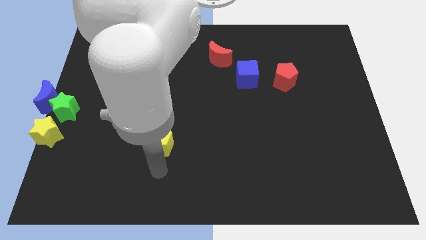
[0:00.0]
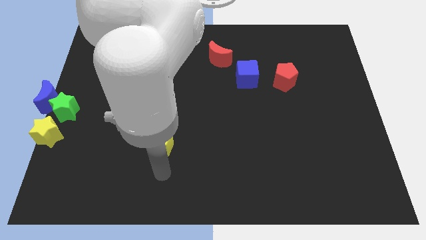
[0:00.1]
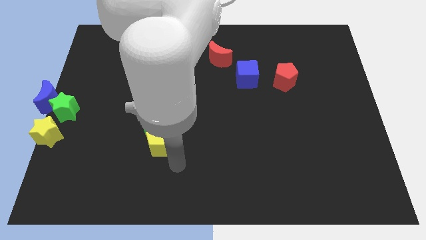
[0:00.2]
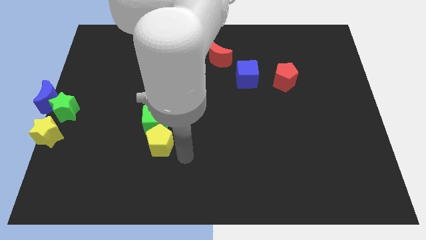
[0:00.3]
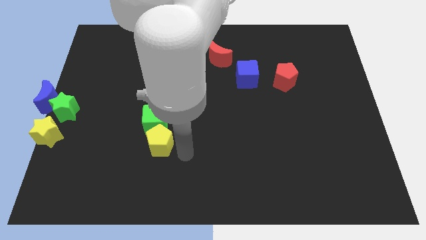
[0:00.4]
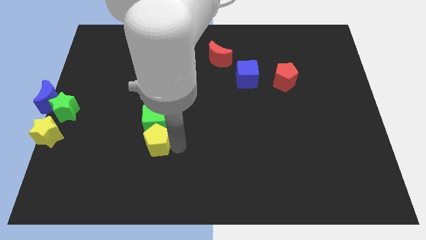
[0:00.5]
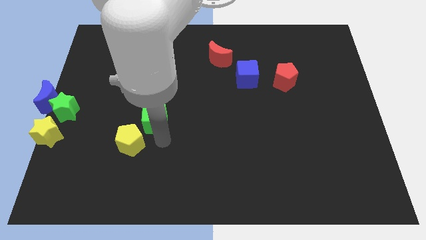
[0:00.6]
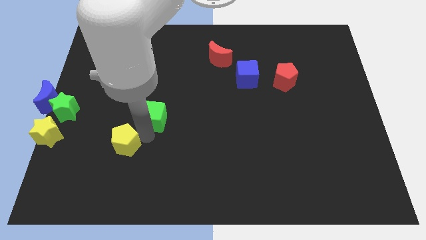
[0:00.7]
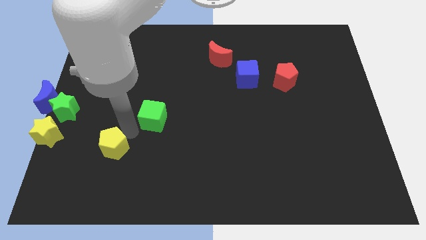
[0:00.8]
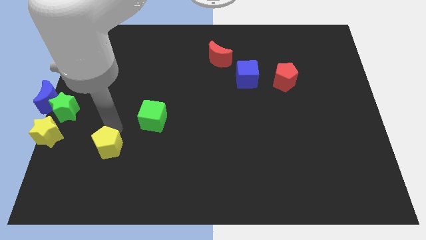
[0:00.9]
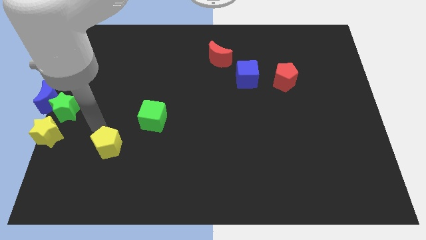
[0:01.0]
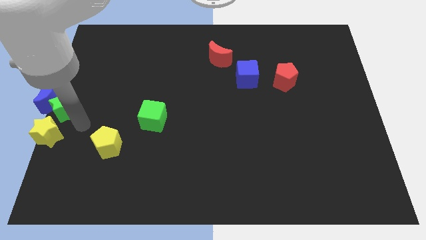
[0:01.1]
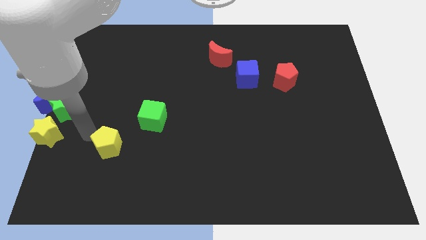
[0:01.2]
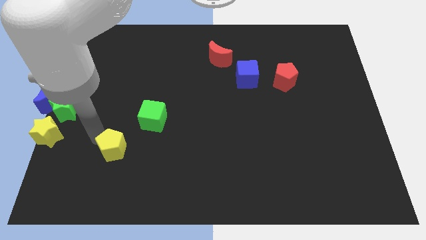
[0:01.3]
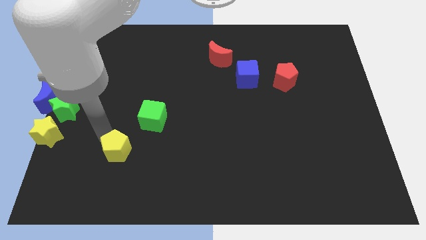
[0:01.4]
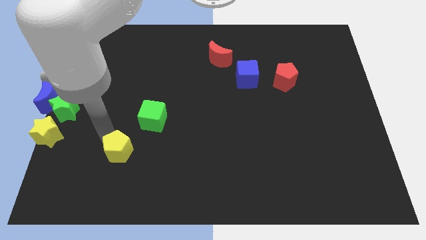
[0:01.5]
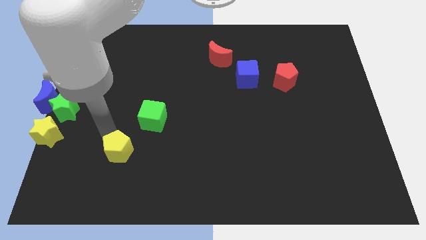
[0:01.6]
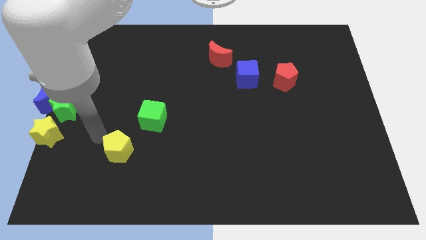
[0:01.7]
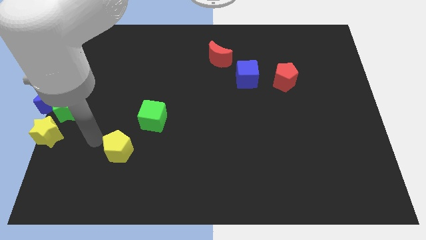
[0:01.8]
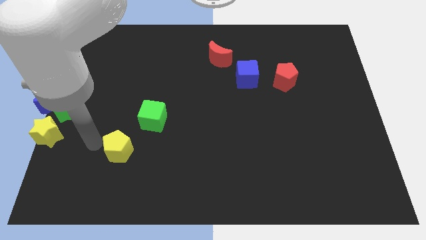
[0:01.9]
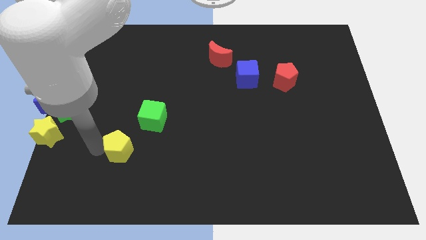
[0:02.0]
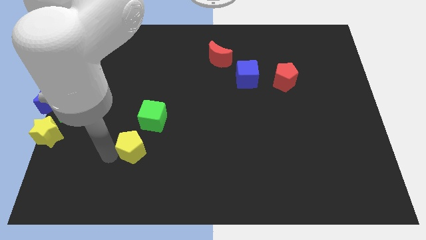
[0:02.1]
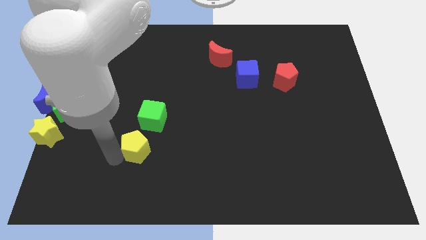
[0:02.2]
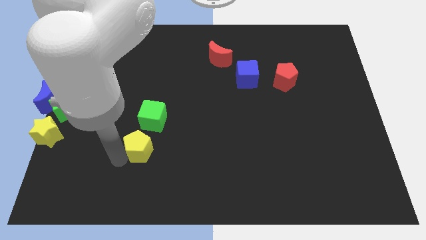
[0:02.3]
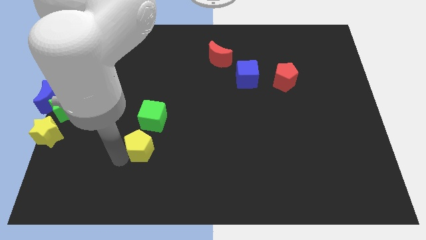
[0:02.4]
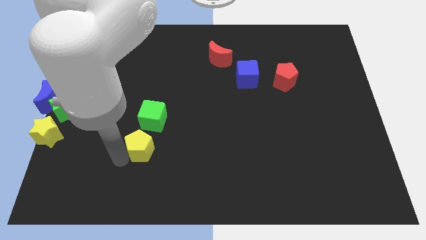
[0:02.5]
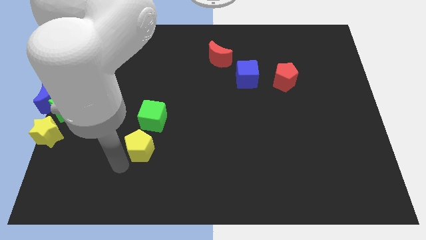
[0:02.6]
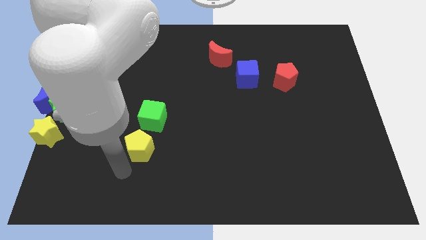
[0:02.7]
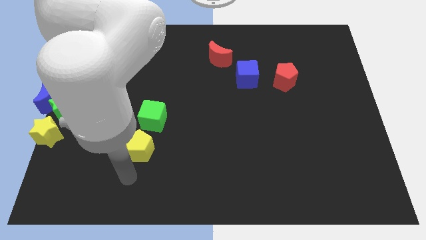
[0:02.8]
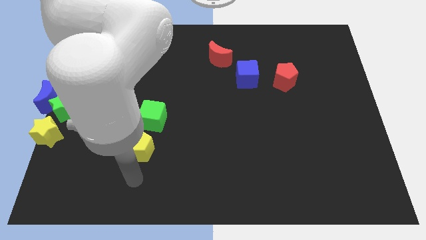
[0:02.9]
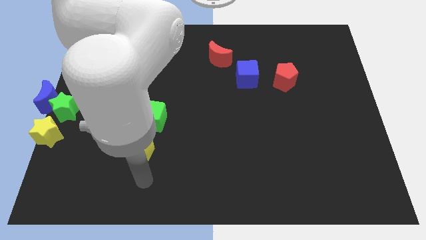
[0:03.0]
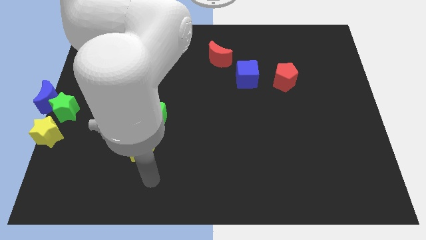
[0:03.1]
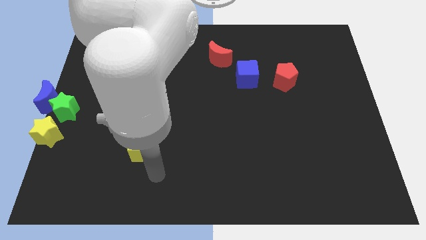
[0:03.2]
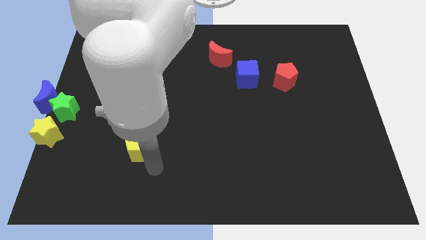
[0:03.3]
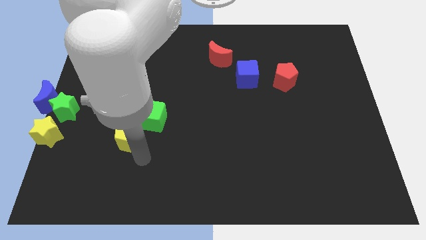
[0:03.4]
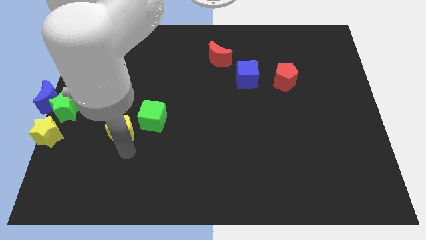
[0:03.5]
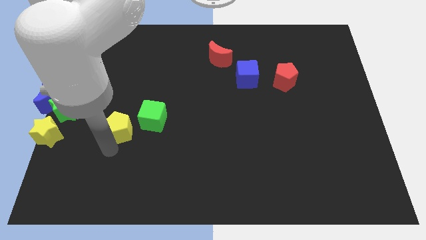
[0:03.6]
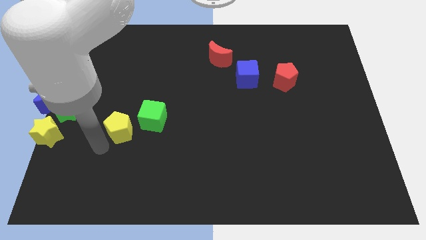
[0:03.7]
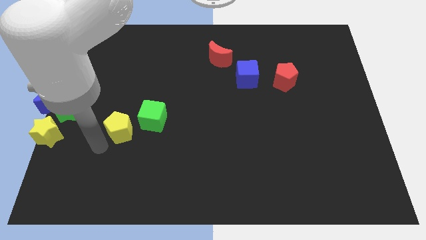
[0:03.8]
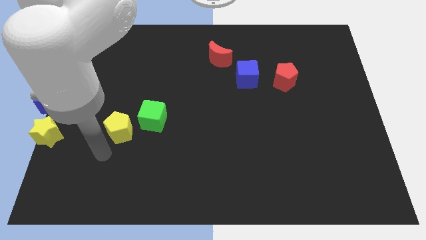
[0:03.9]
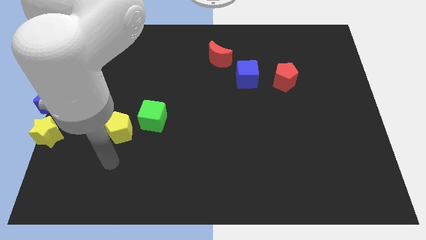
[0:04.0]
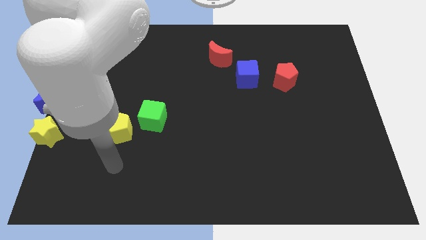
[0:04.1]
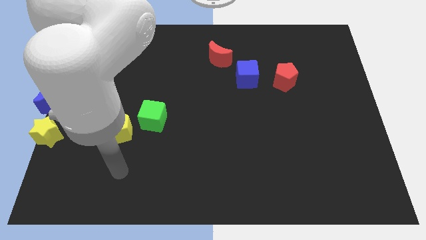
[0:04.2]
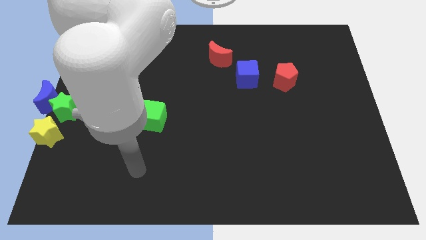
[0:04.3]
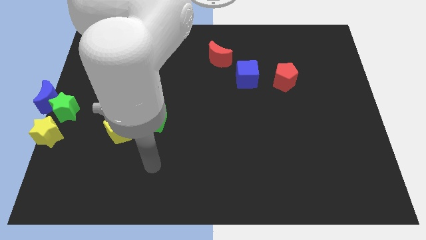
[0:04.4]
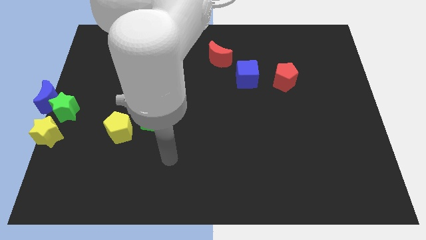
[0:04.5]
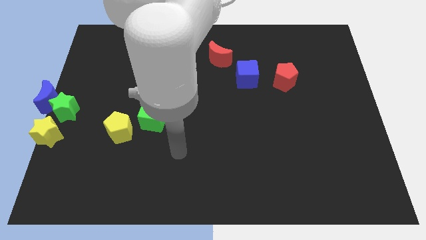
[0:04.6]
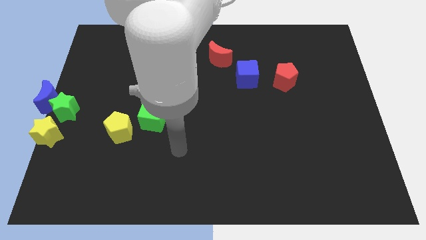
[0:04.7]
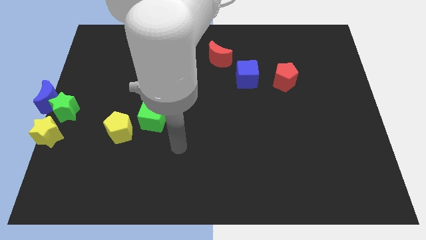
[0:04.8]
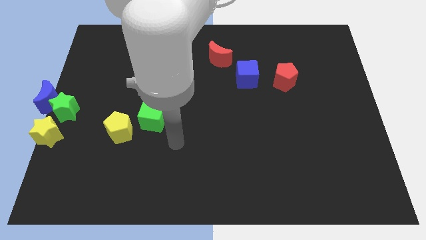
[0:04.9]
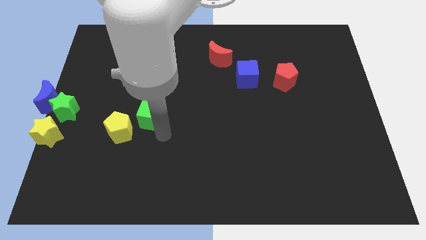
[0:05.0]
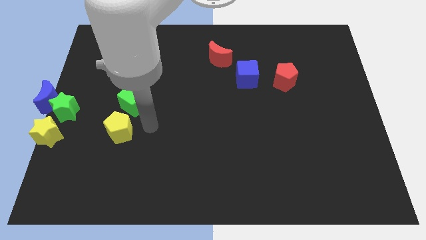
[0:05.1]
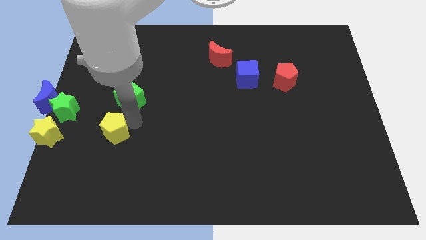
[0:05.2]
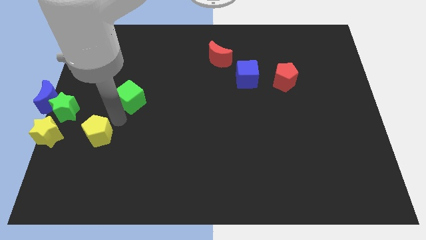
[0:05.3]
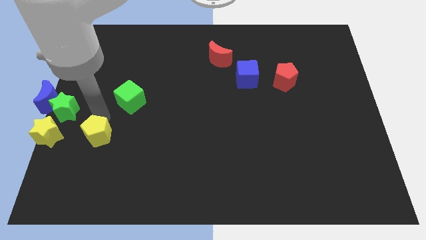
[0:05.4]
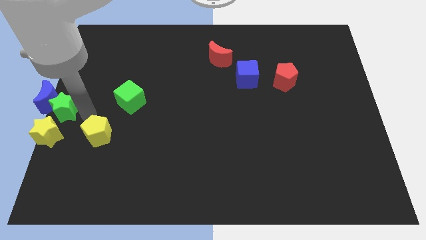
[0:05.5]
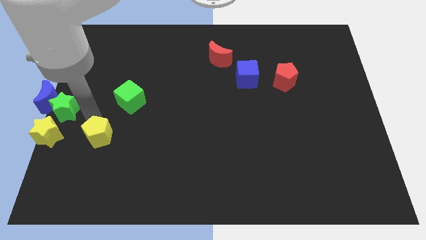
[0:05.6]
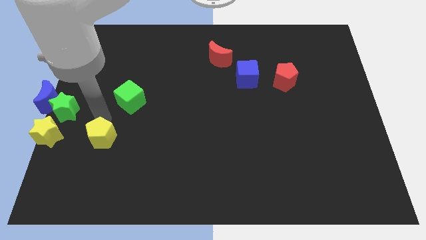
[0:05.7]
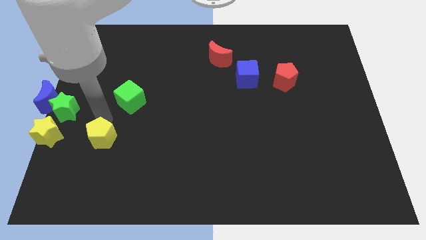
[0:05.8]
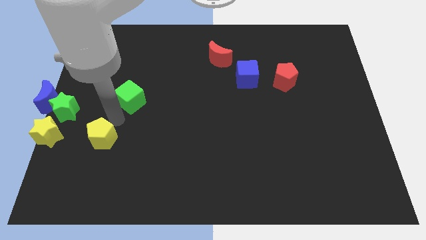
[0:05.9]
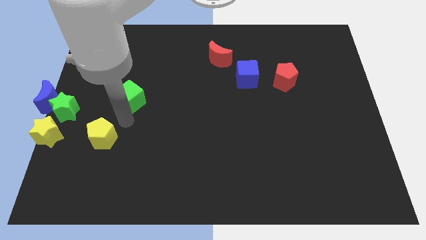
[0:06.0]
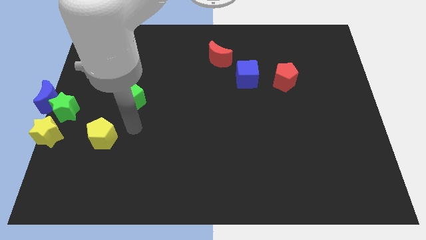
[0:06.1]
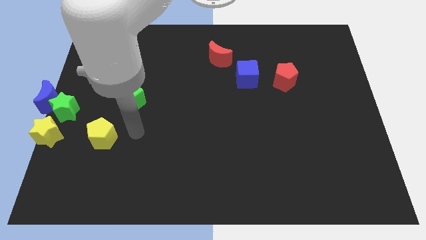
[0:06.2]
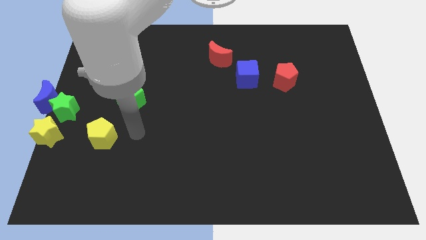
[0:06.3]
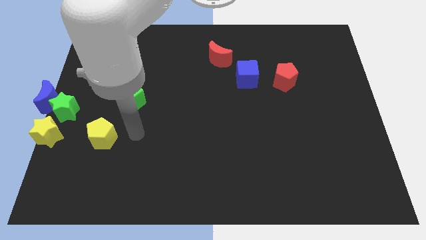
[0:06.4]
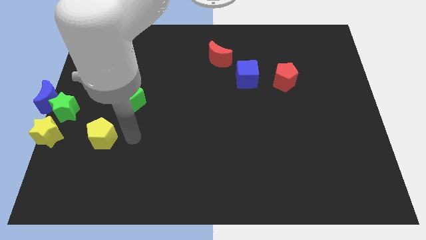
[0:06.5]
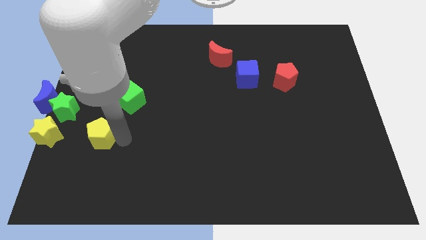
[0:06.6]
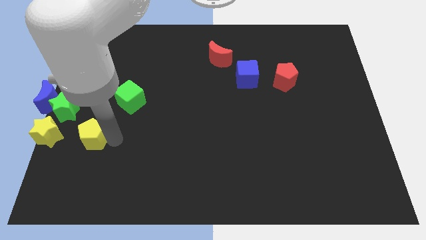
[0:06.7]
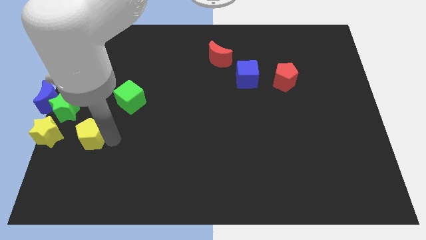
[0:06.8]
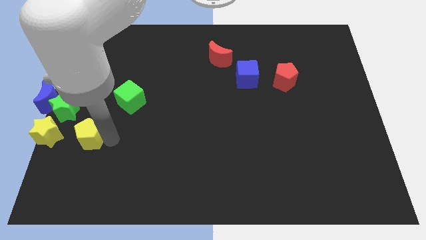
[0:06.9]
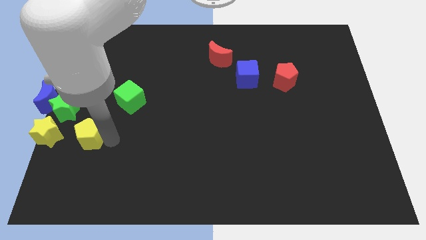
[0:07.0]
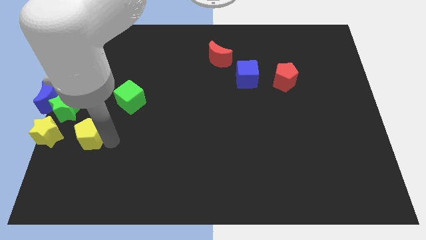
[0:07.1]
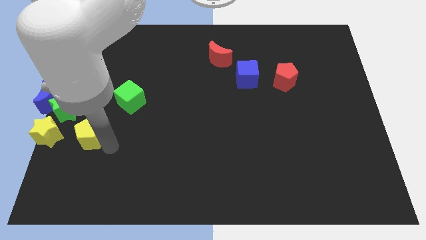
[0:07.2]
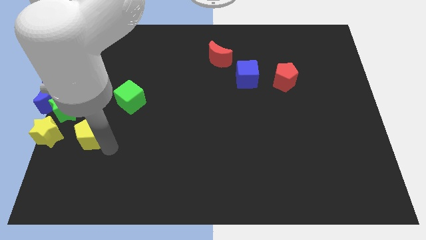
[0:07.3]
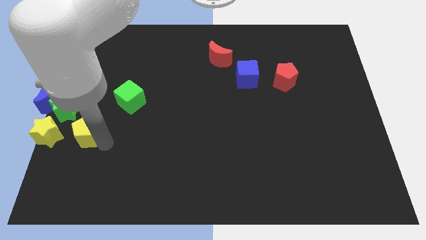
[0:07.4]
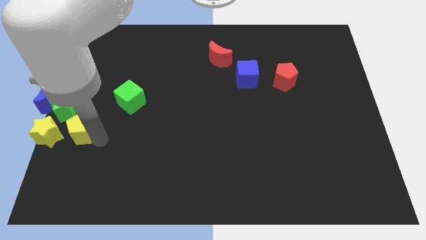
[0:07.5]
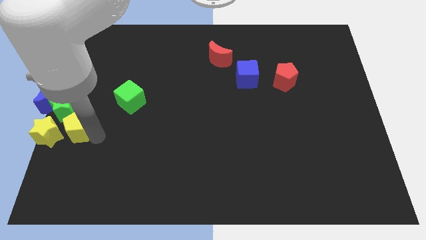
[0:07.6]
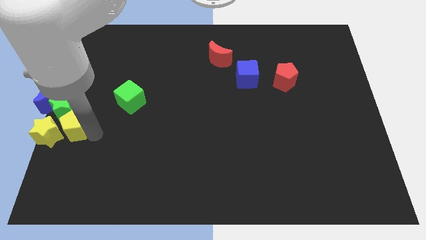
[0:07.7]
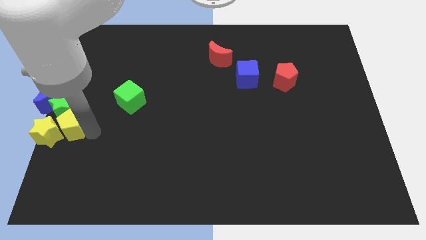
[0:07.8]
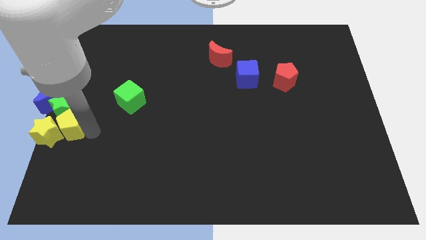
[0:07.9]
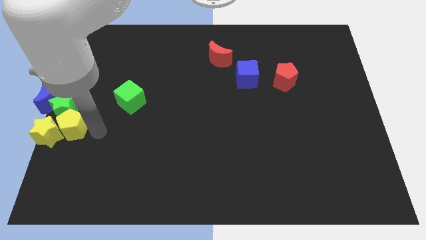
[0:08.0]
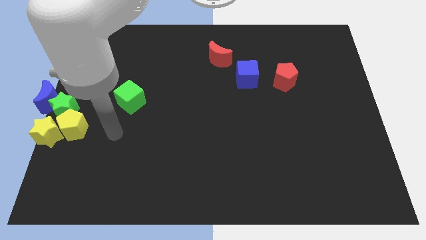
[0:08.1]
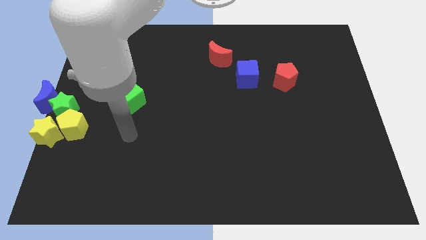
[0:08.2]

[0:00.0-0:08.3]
slide the yellow pentagon into the group of blocks

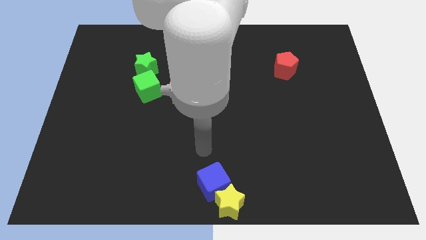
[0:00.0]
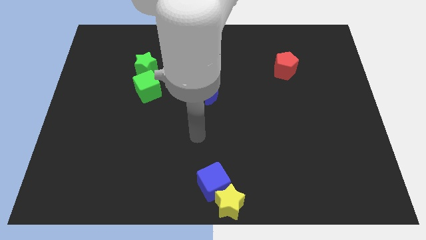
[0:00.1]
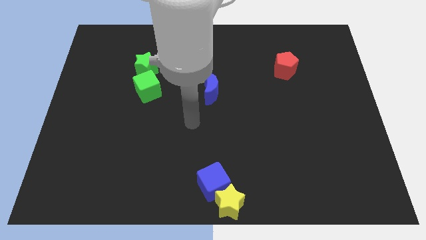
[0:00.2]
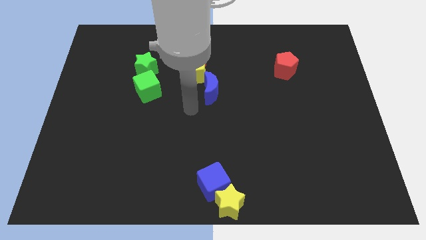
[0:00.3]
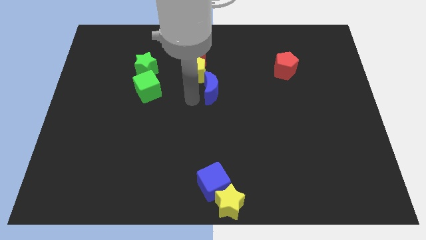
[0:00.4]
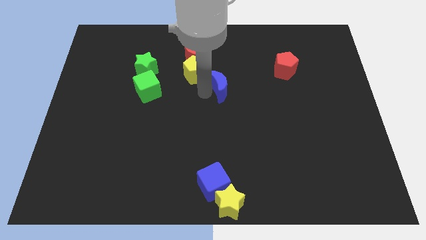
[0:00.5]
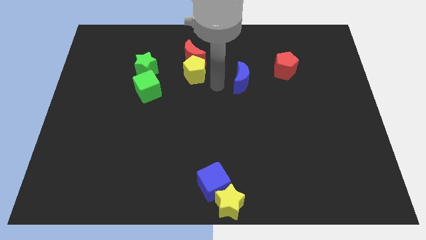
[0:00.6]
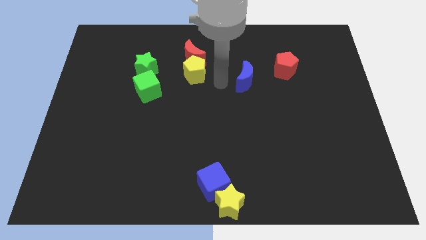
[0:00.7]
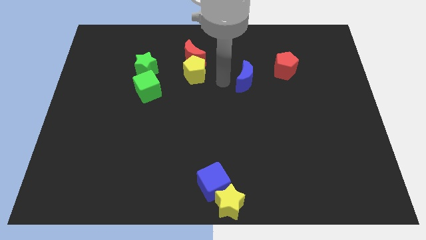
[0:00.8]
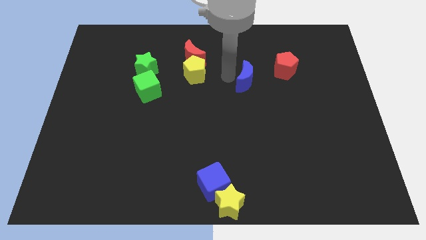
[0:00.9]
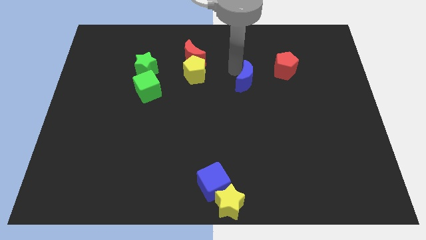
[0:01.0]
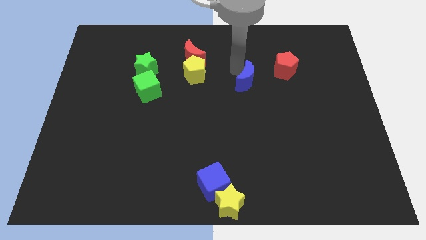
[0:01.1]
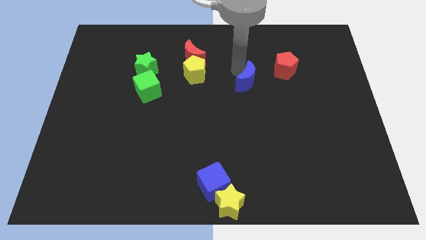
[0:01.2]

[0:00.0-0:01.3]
drag the blue moon to the bottom left side of the red pentagon
